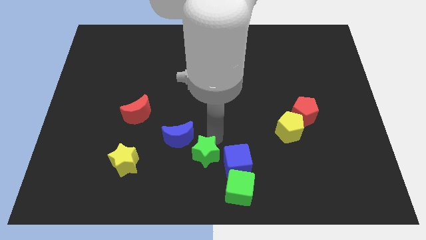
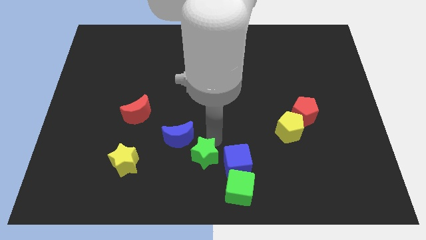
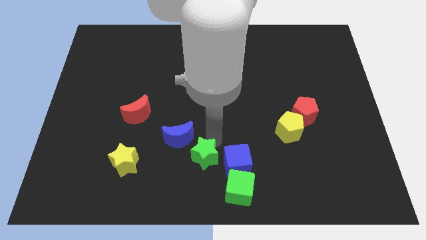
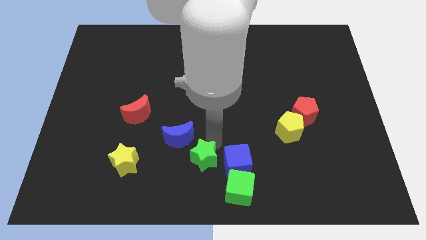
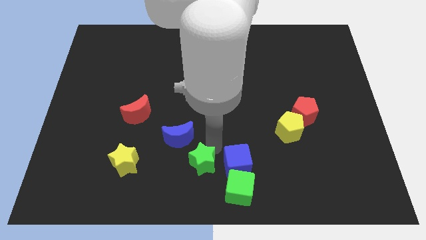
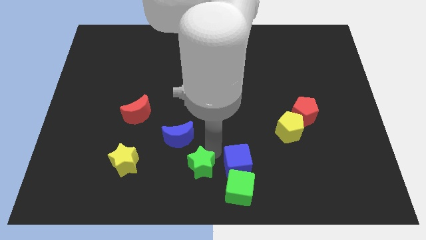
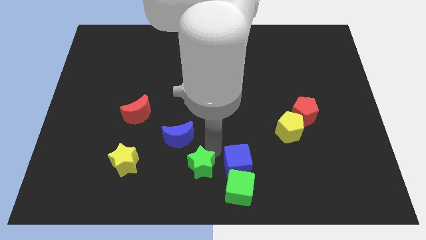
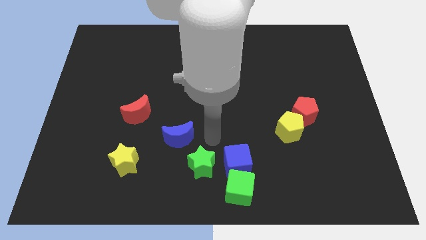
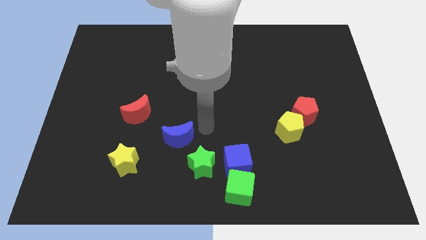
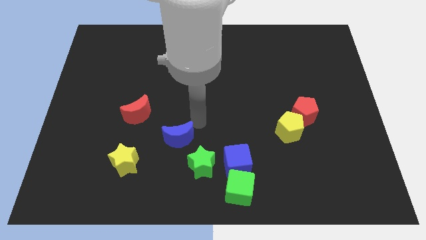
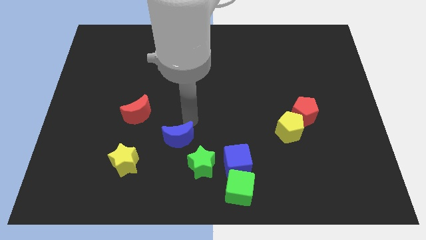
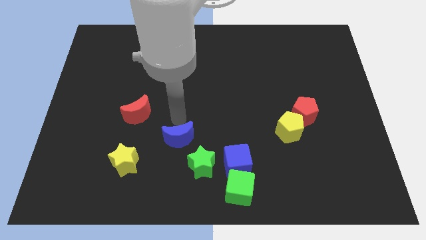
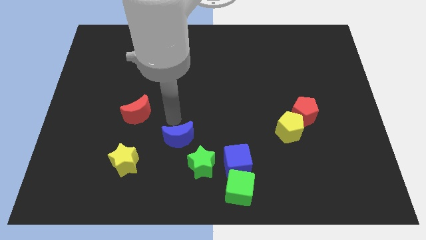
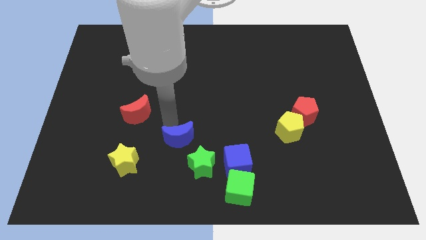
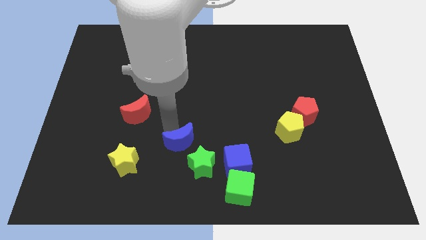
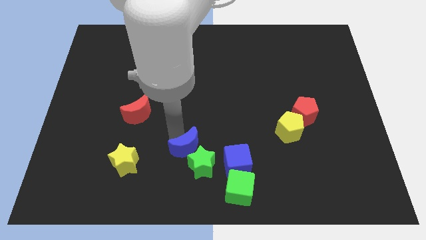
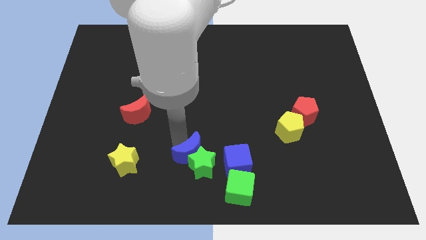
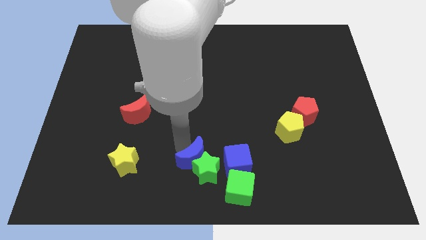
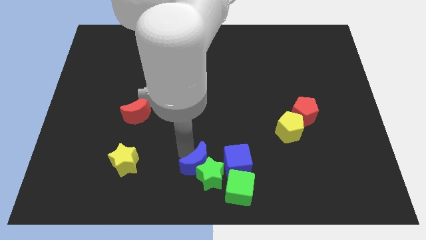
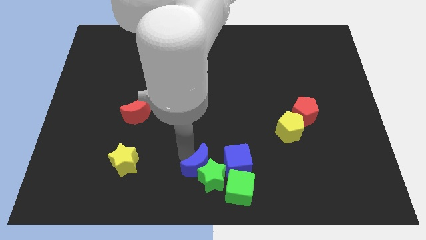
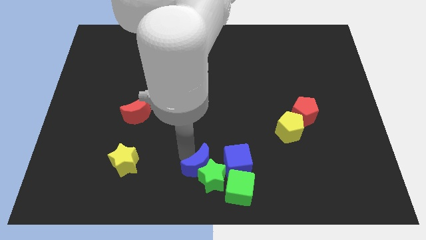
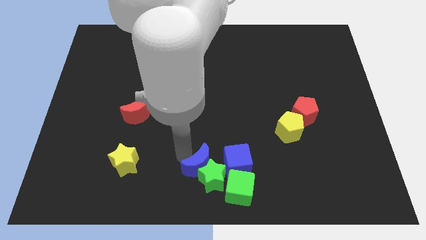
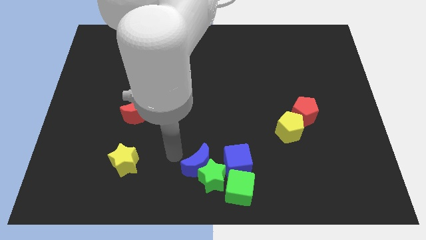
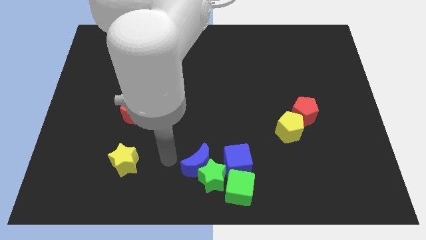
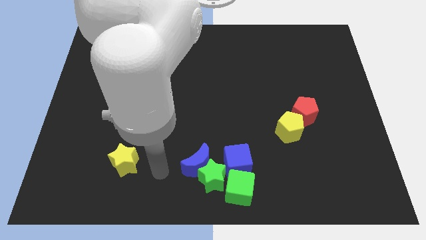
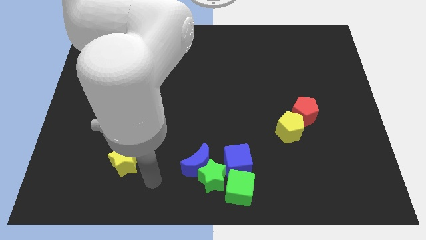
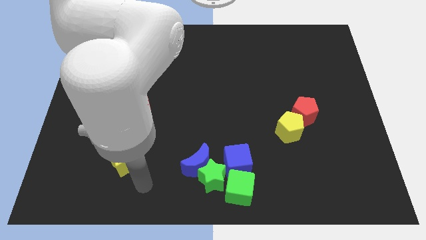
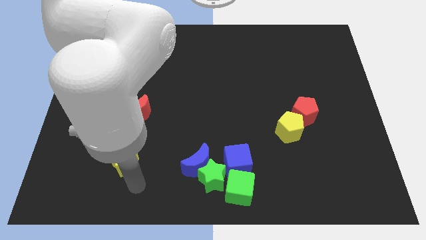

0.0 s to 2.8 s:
put the blue semicircle into the green star

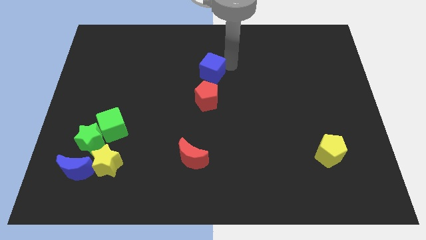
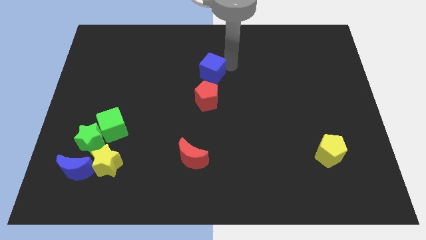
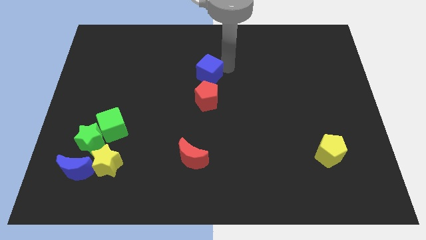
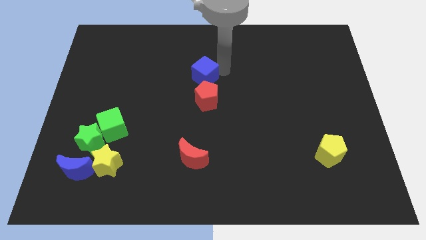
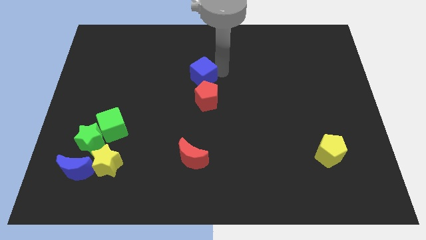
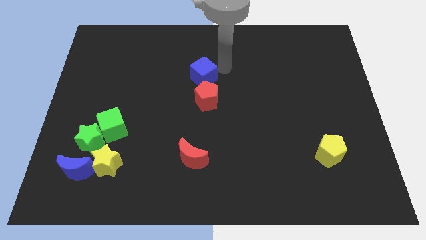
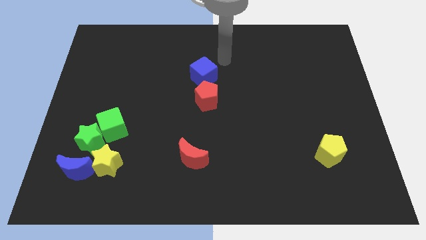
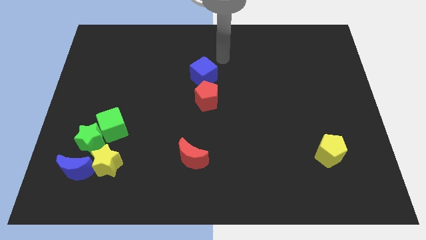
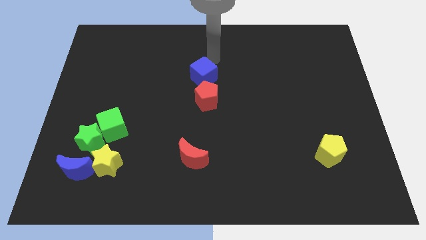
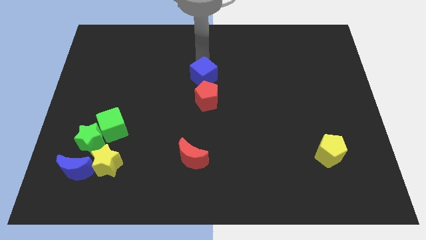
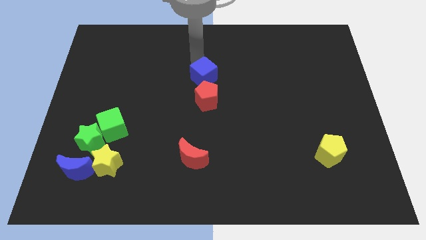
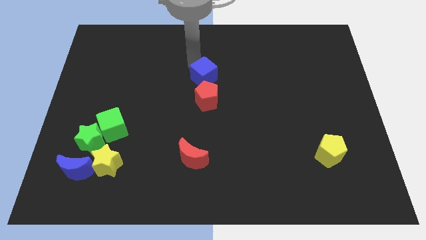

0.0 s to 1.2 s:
place the blue cube vertically above the red pentagon

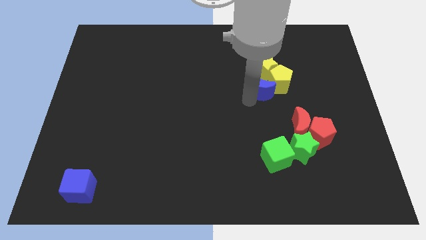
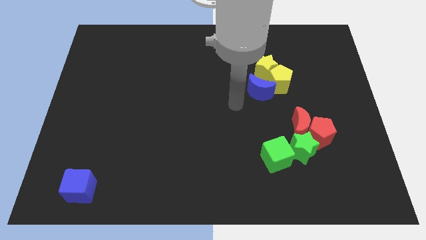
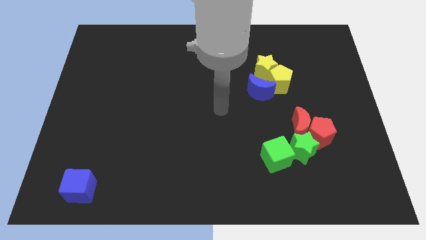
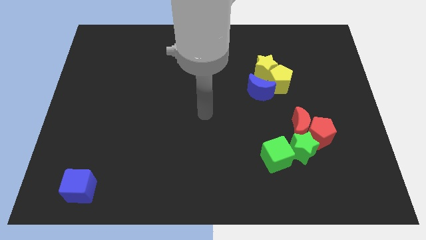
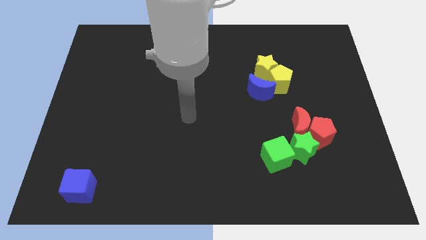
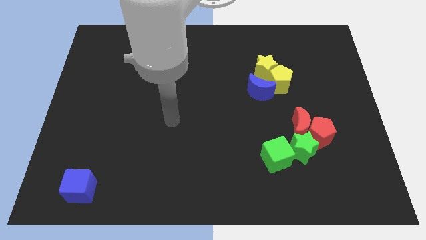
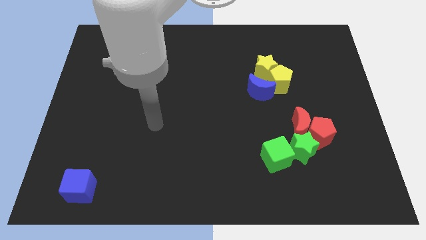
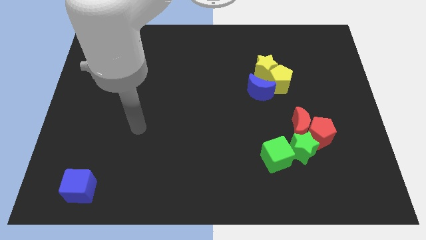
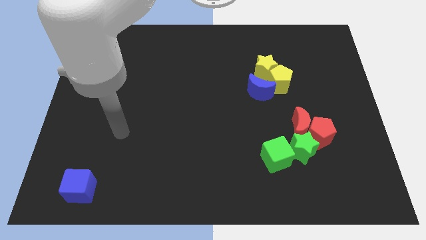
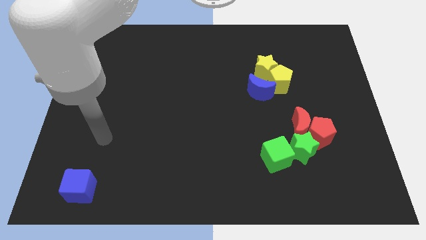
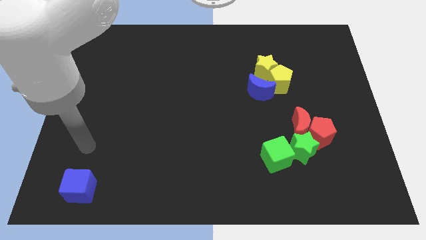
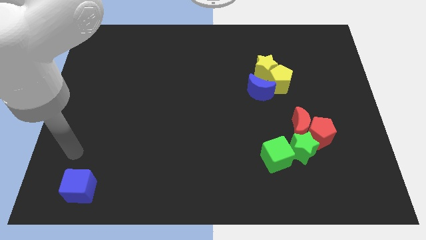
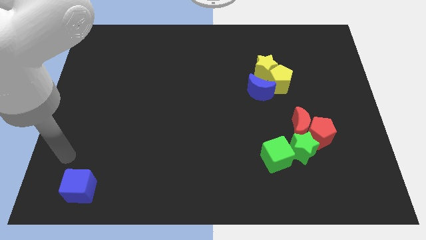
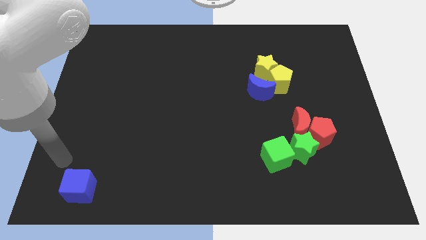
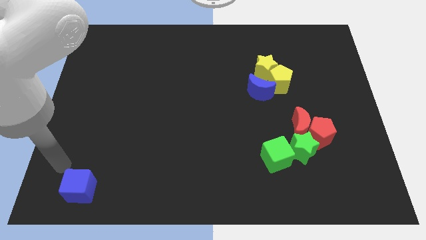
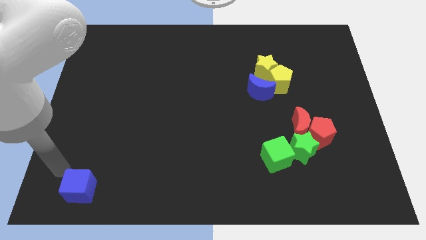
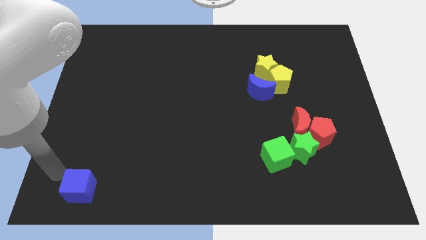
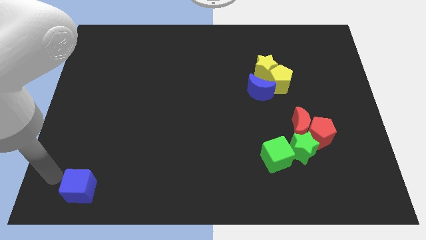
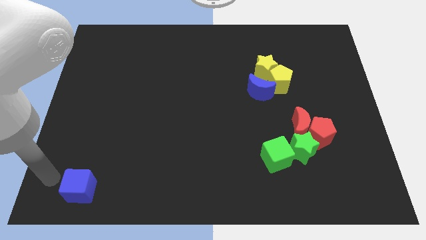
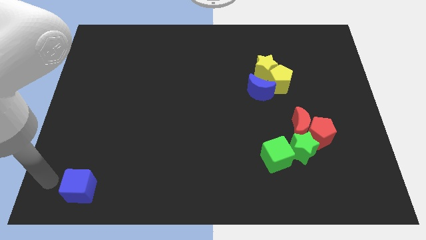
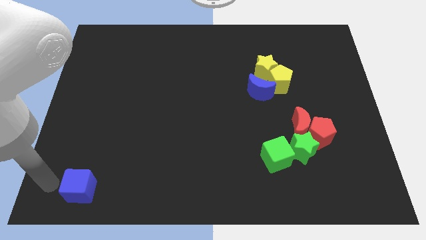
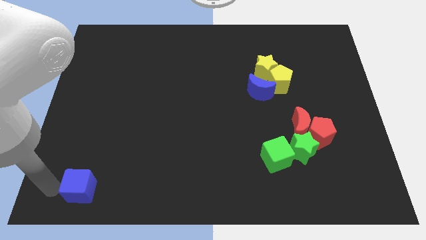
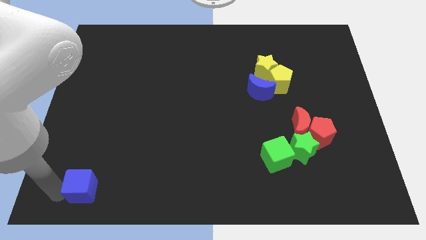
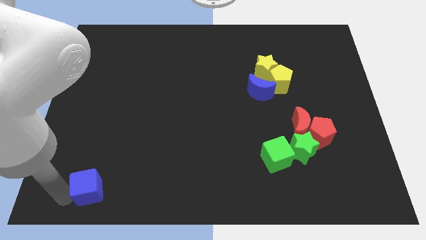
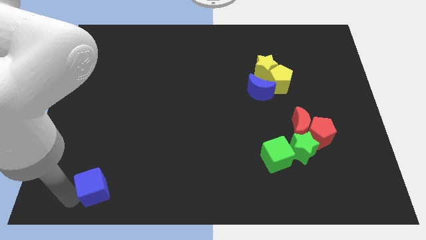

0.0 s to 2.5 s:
move the blue cube slightly to the center

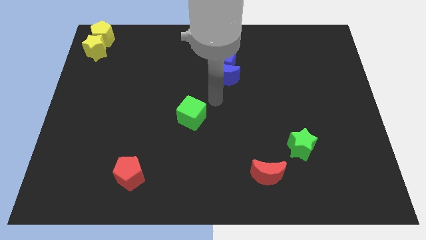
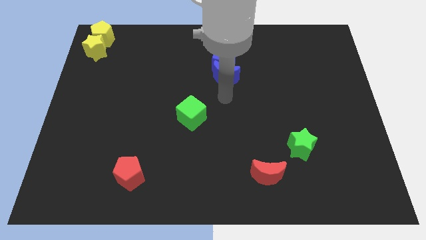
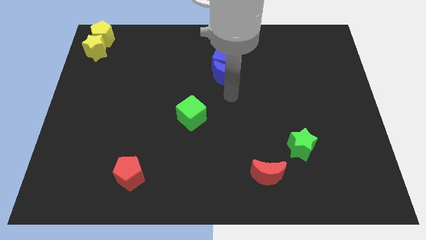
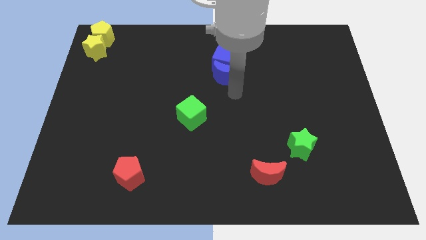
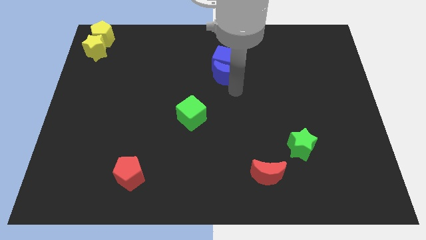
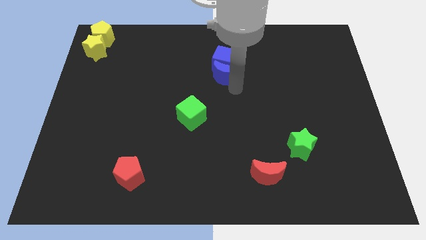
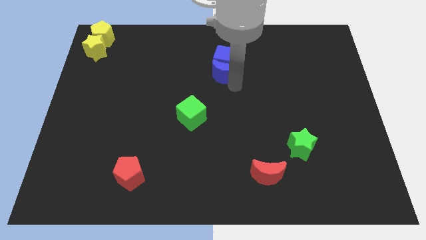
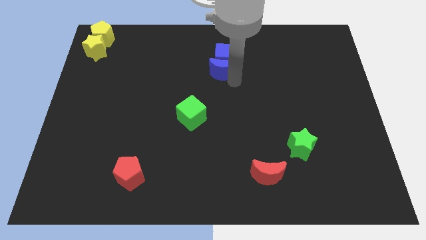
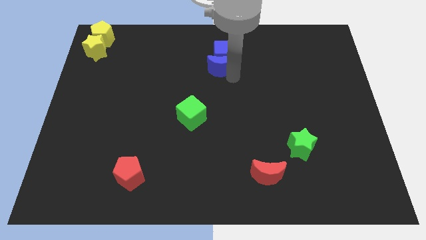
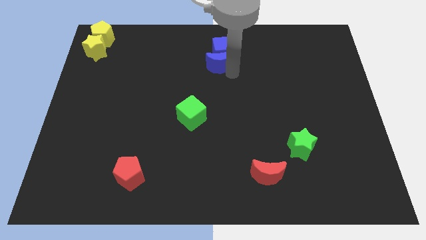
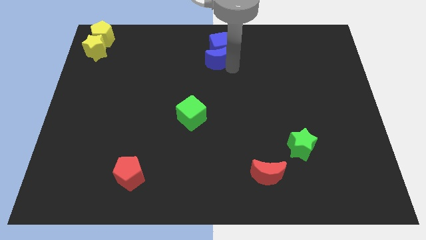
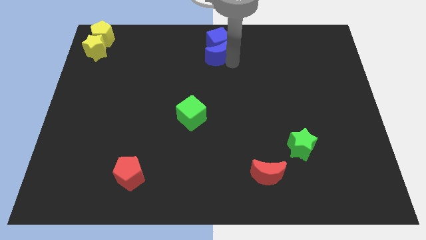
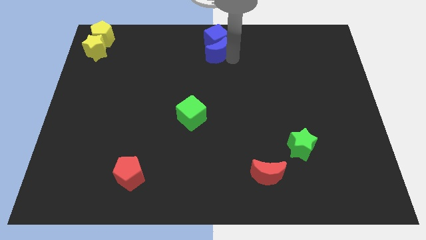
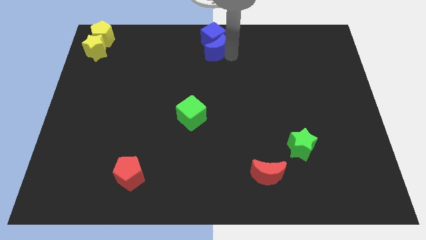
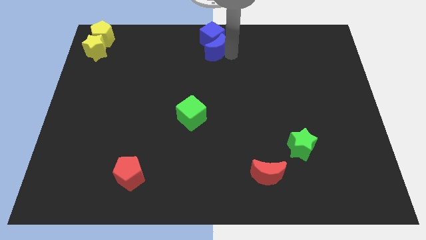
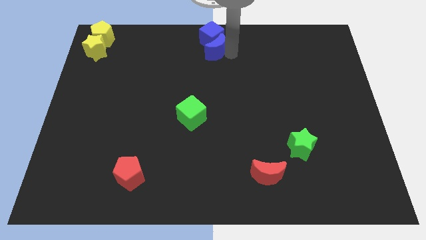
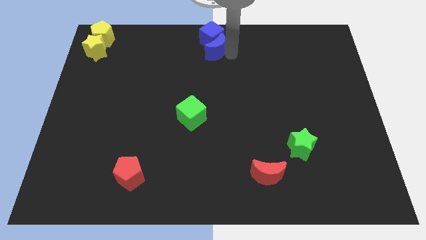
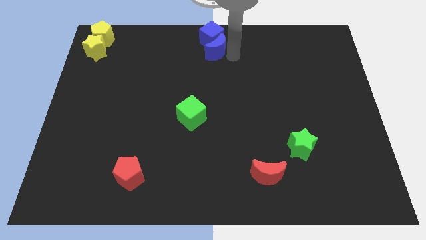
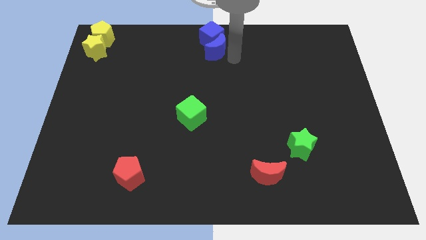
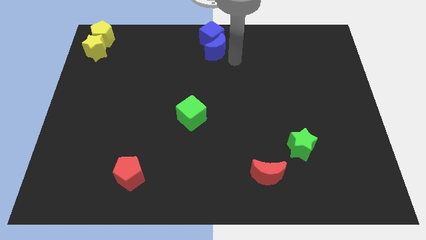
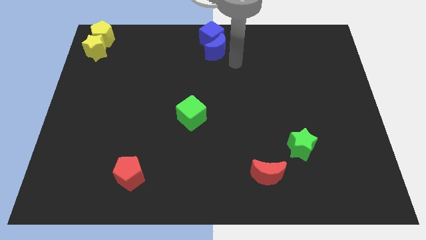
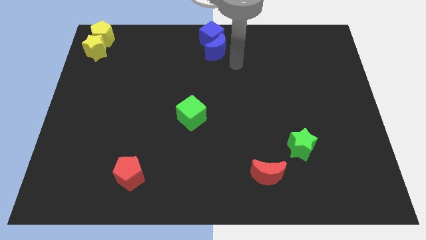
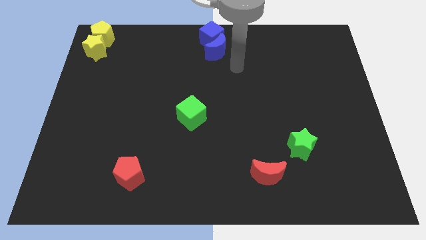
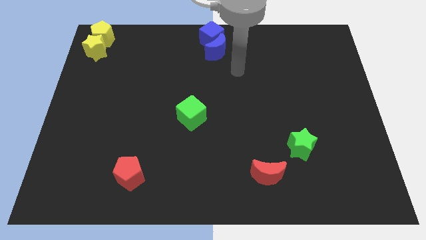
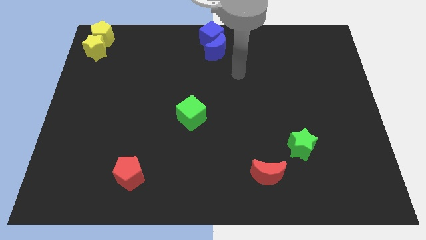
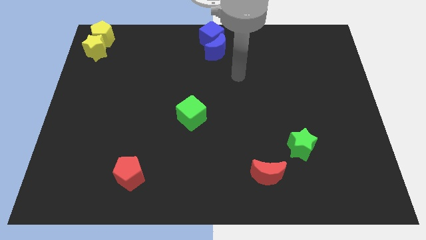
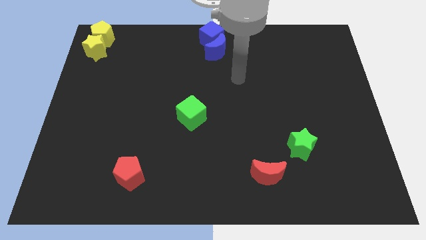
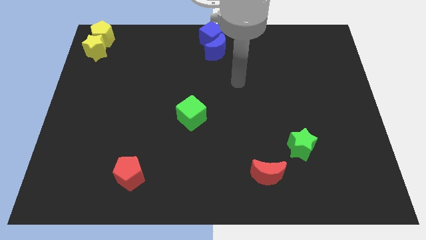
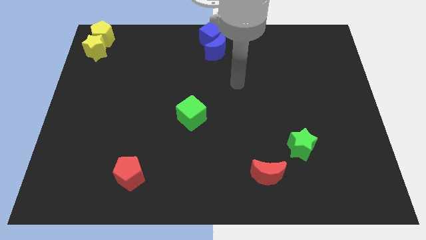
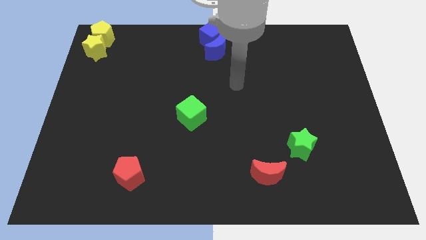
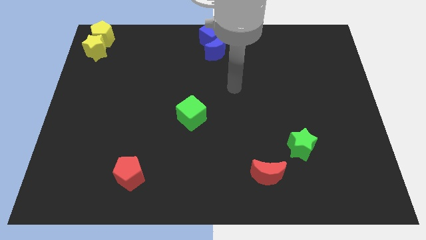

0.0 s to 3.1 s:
push the blue cube with the help of blue crescent towards top center of the board
